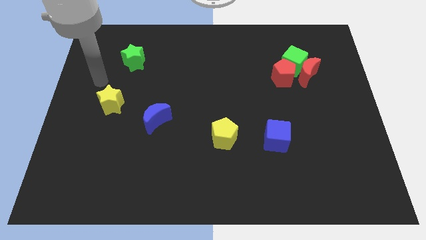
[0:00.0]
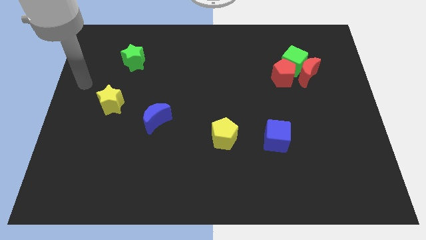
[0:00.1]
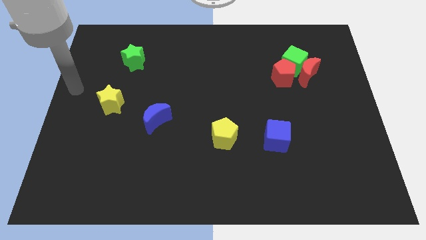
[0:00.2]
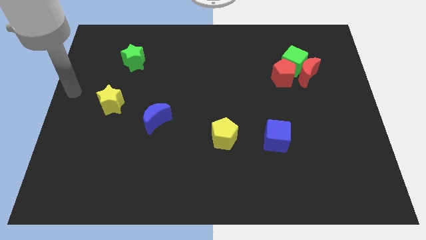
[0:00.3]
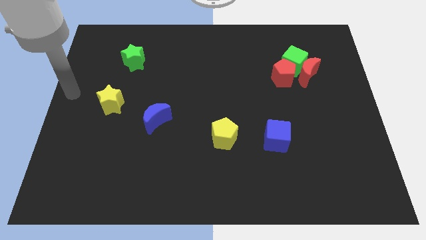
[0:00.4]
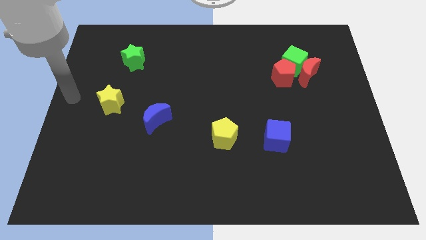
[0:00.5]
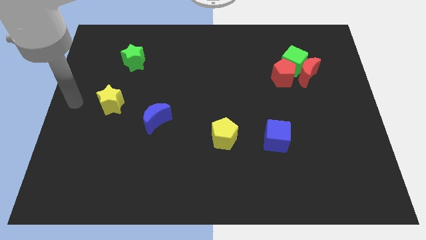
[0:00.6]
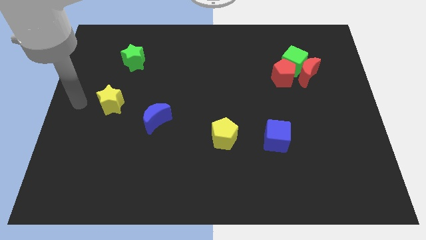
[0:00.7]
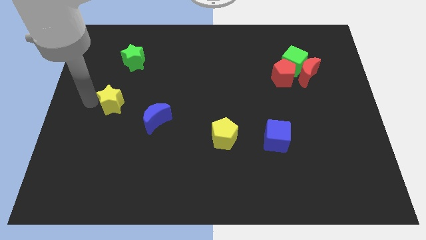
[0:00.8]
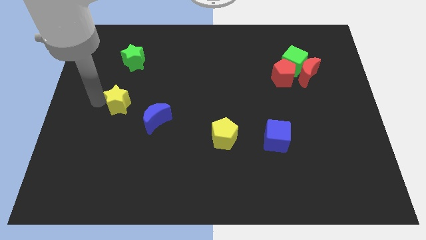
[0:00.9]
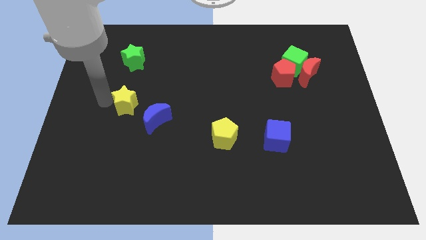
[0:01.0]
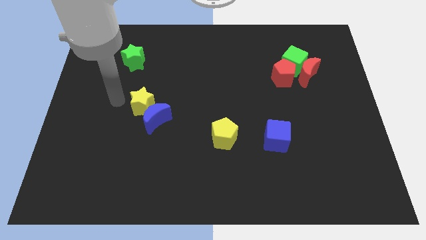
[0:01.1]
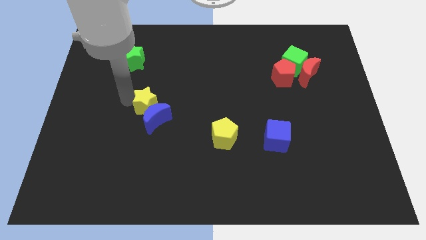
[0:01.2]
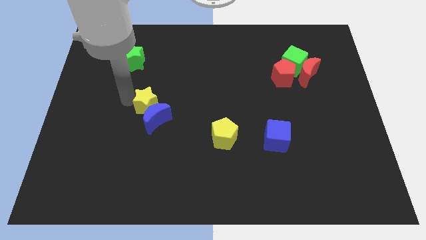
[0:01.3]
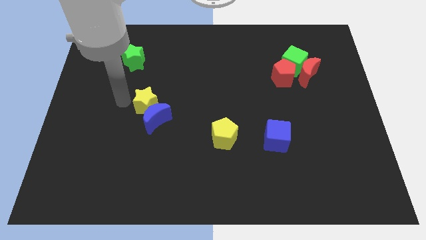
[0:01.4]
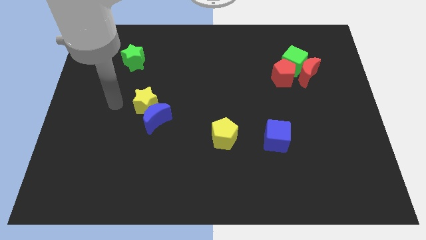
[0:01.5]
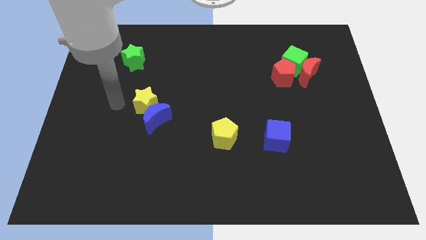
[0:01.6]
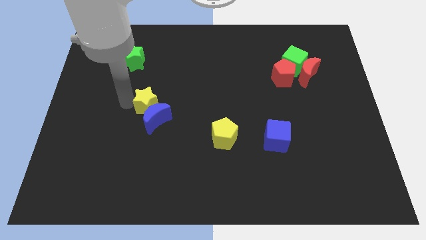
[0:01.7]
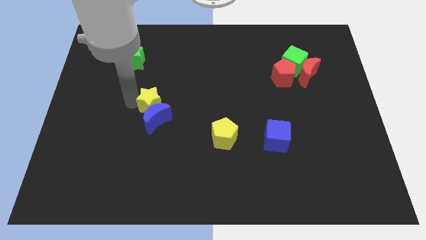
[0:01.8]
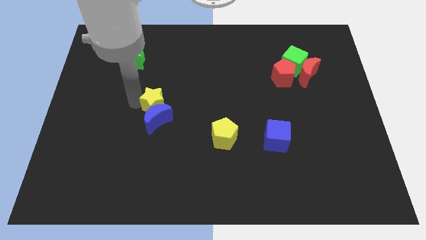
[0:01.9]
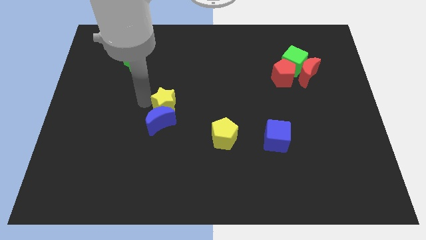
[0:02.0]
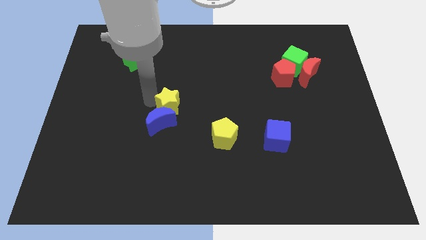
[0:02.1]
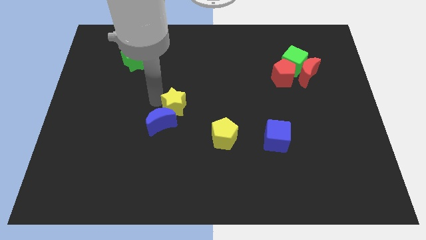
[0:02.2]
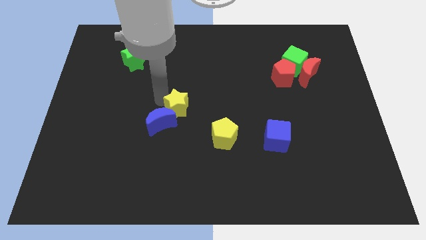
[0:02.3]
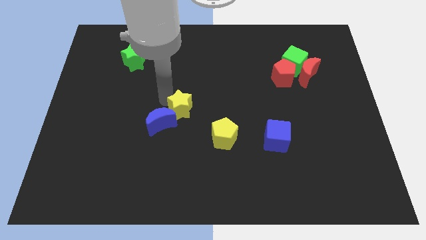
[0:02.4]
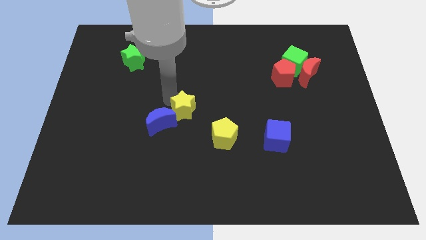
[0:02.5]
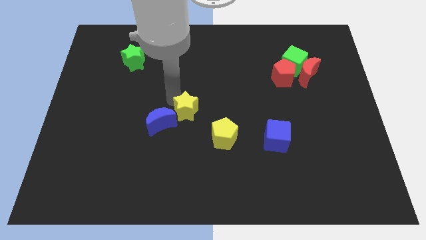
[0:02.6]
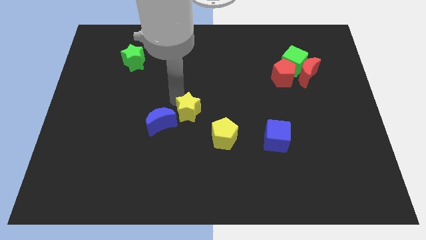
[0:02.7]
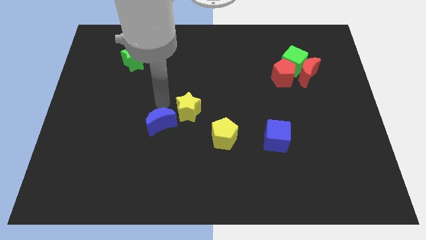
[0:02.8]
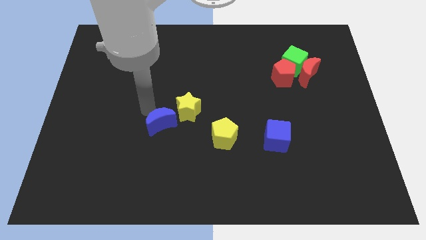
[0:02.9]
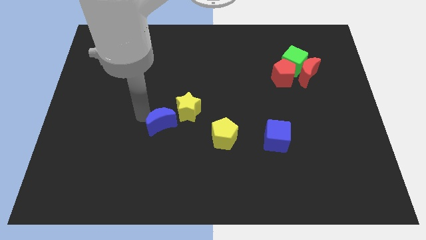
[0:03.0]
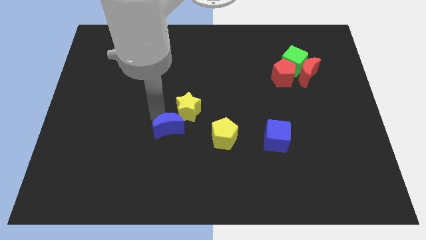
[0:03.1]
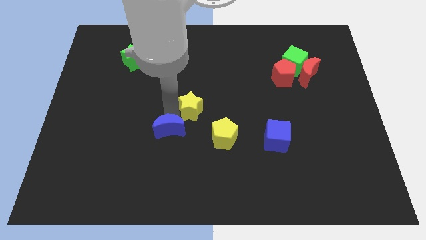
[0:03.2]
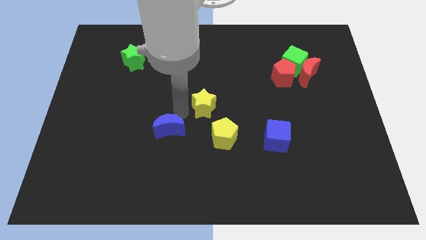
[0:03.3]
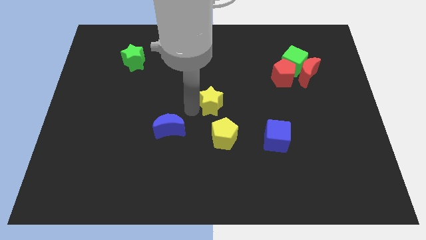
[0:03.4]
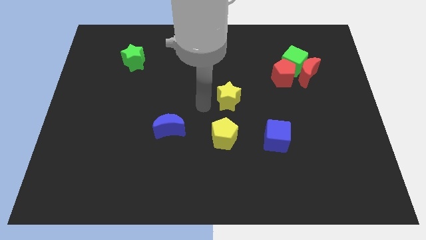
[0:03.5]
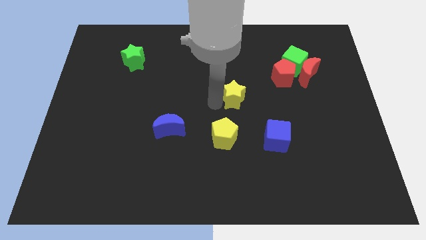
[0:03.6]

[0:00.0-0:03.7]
push the yellow star to the right

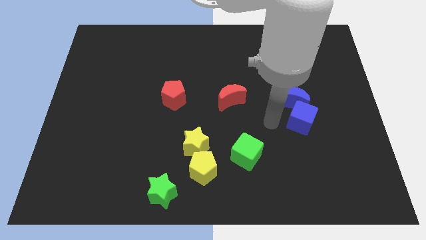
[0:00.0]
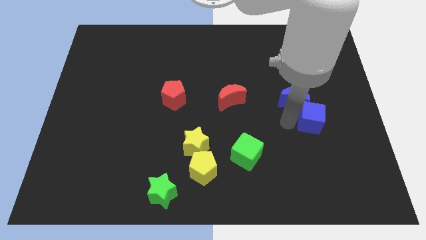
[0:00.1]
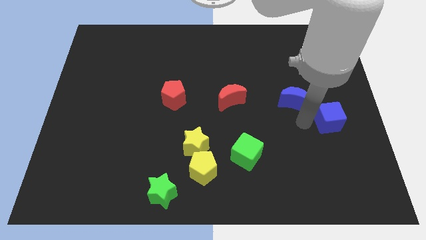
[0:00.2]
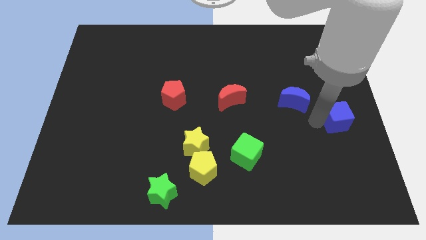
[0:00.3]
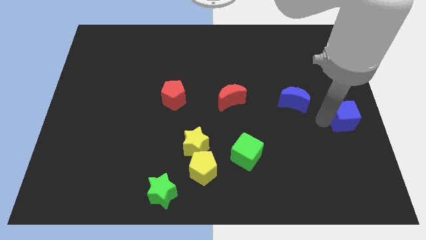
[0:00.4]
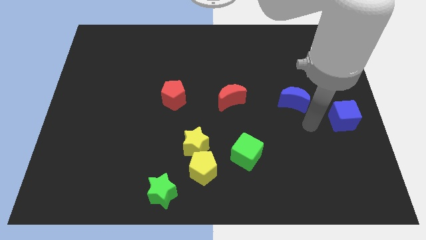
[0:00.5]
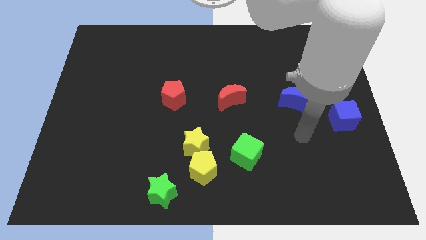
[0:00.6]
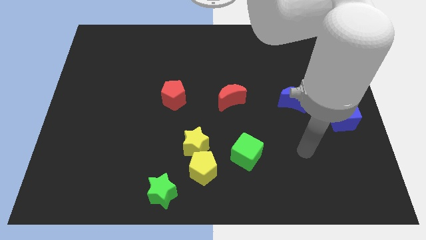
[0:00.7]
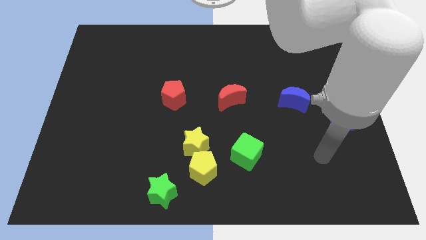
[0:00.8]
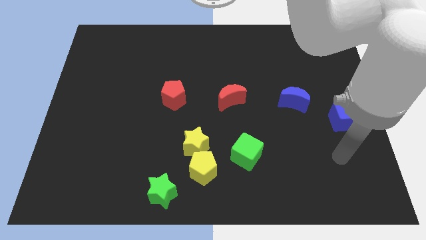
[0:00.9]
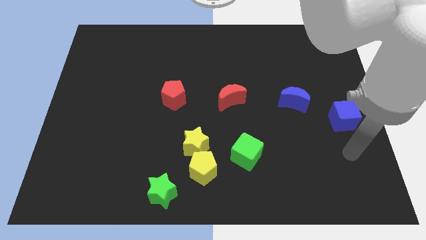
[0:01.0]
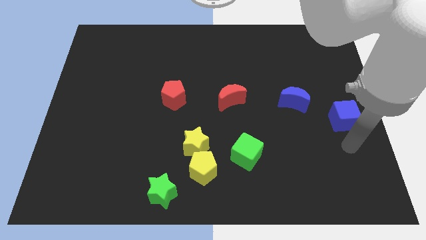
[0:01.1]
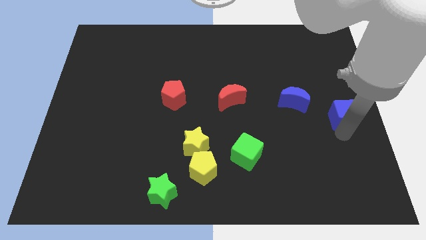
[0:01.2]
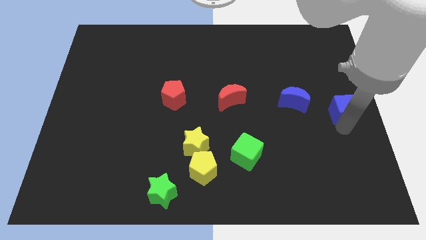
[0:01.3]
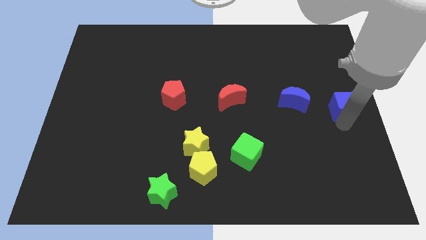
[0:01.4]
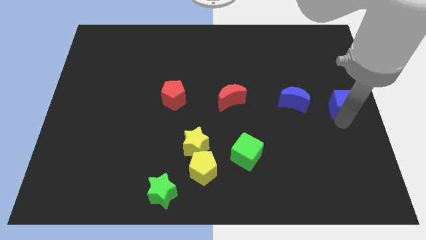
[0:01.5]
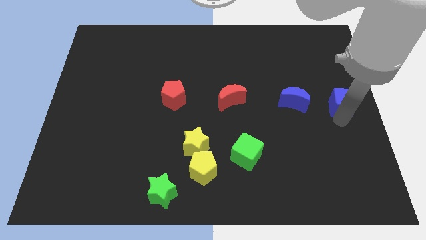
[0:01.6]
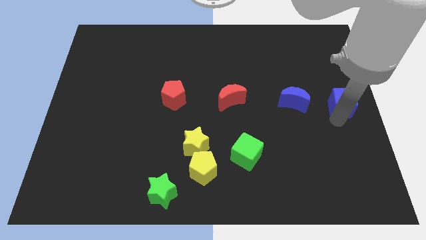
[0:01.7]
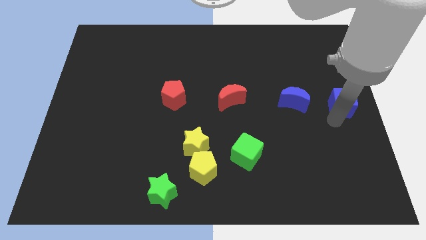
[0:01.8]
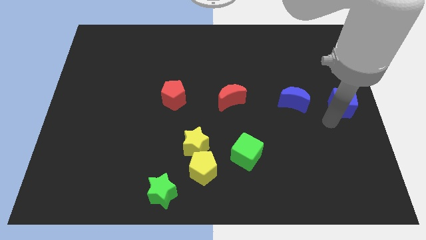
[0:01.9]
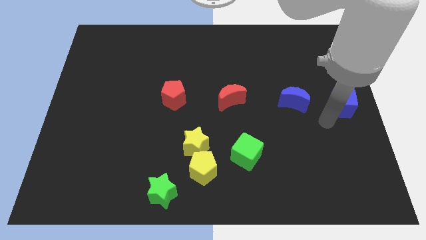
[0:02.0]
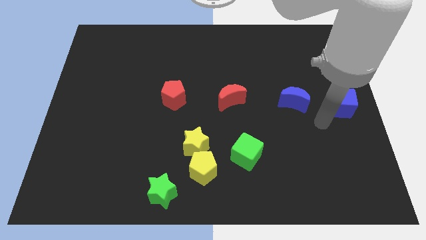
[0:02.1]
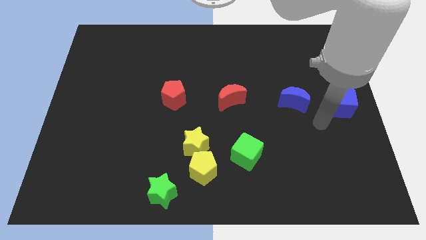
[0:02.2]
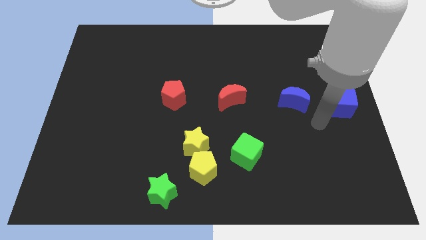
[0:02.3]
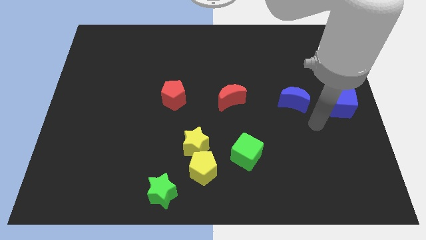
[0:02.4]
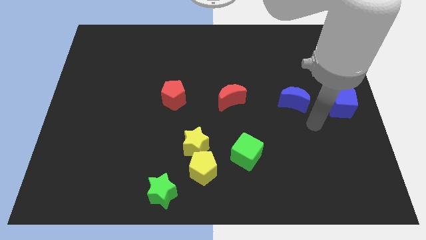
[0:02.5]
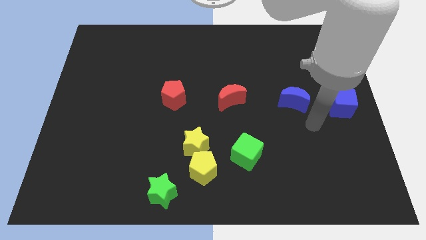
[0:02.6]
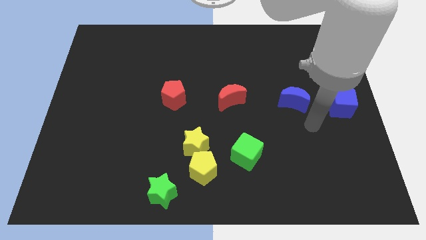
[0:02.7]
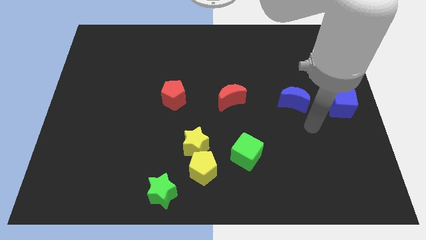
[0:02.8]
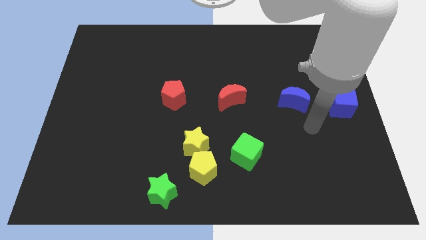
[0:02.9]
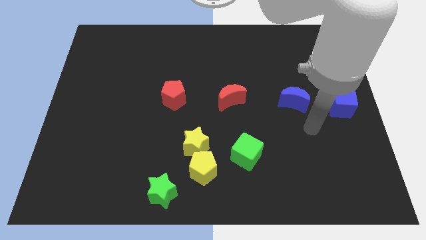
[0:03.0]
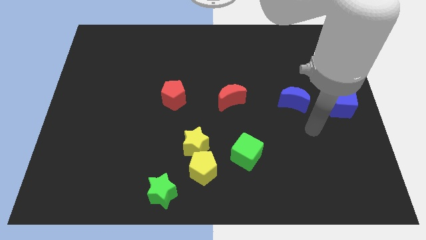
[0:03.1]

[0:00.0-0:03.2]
move the blue cube away from the blue moon

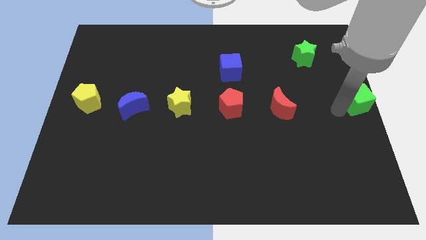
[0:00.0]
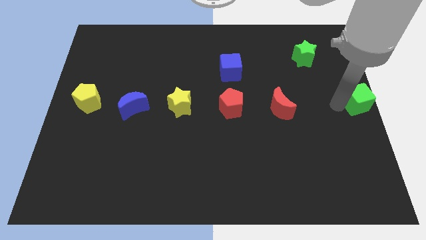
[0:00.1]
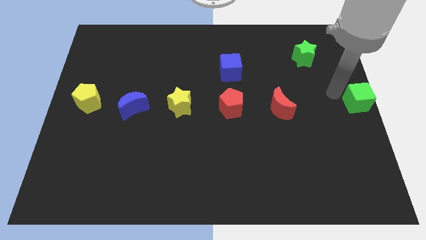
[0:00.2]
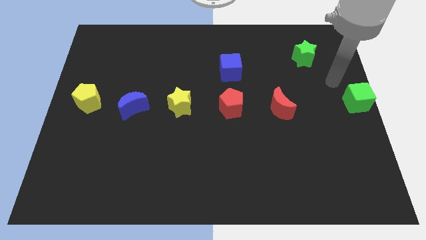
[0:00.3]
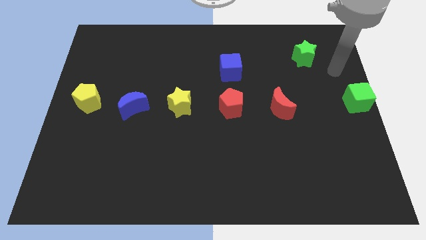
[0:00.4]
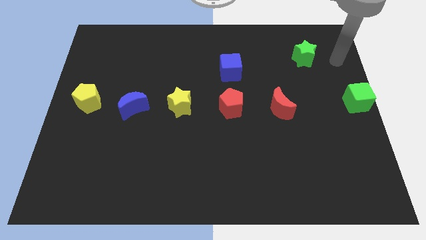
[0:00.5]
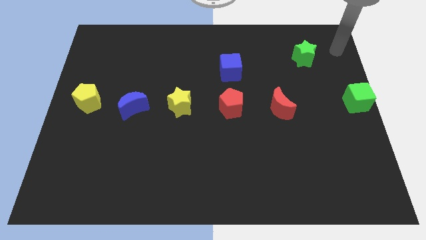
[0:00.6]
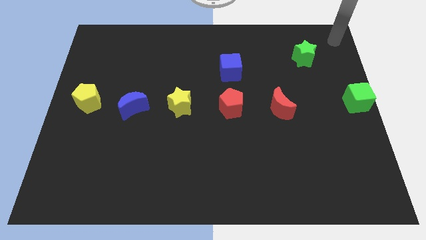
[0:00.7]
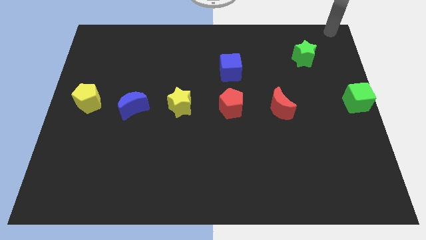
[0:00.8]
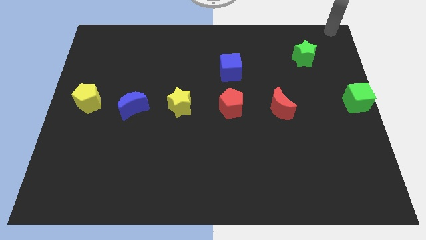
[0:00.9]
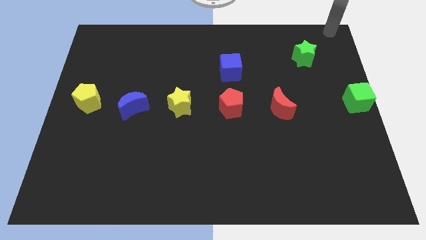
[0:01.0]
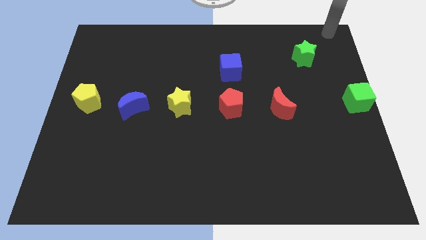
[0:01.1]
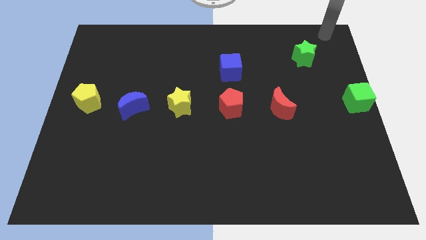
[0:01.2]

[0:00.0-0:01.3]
move your arm away from the green cube

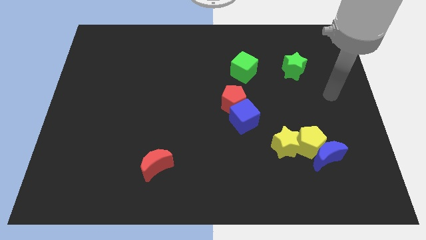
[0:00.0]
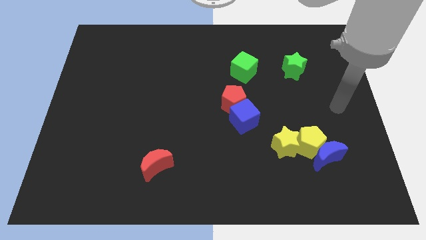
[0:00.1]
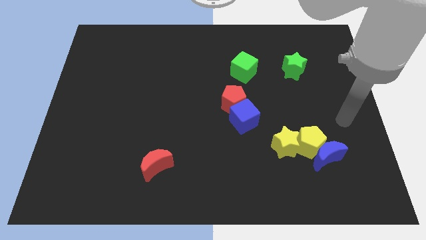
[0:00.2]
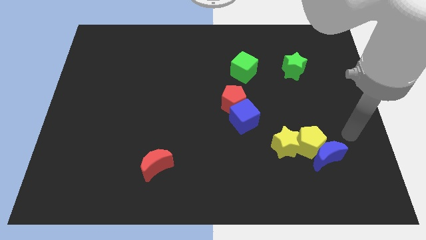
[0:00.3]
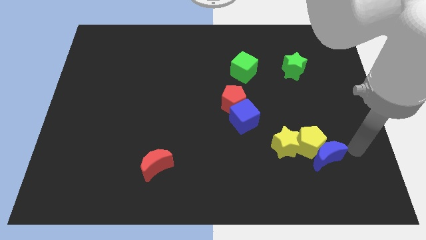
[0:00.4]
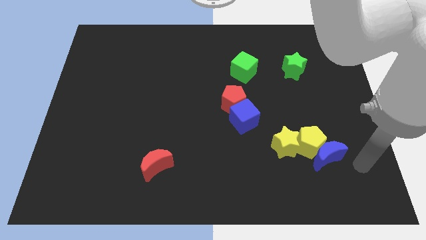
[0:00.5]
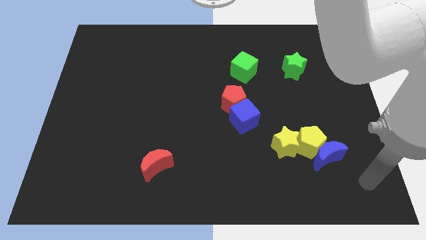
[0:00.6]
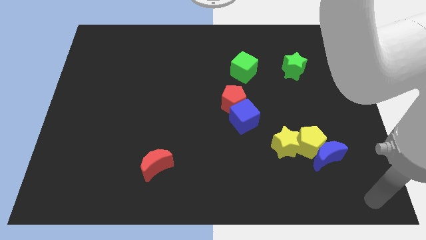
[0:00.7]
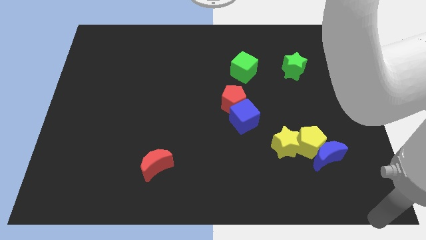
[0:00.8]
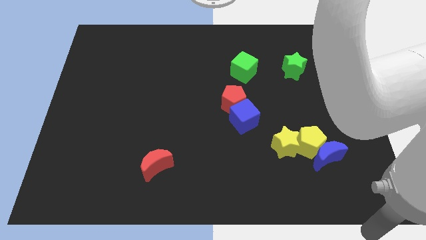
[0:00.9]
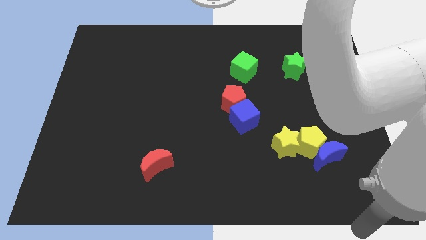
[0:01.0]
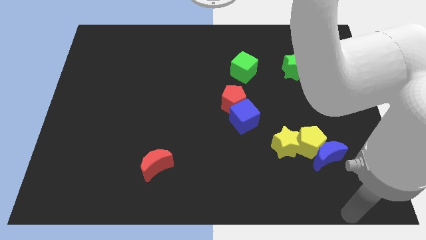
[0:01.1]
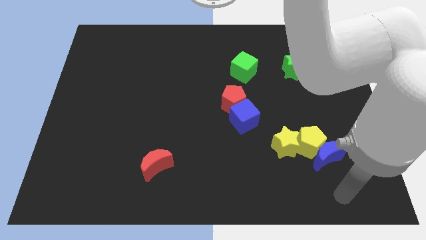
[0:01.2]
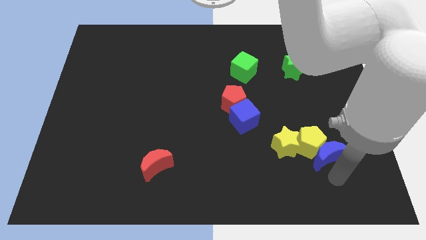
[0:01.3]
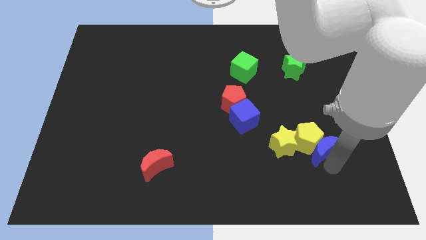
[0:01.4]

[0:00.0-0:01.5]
point your arm at the bottom of the blue crescent
